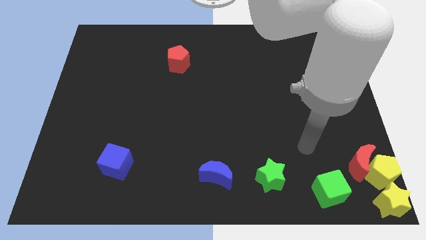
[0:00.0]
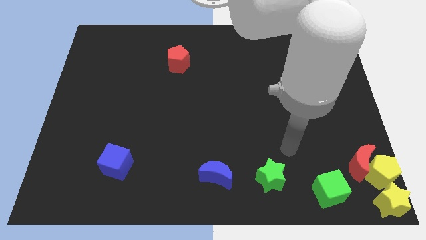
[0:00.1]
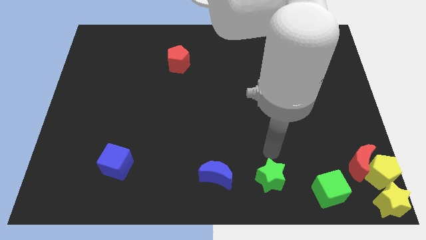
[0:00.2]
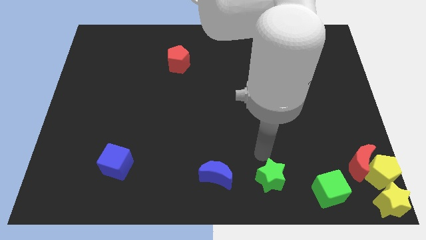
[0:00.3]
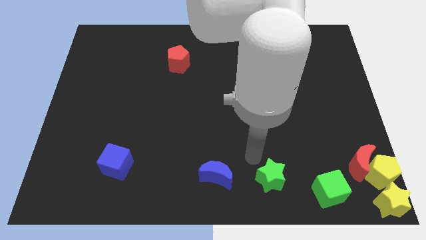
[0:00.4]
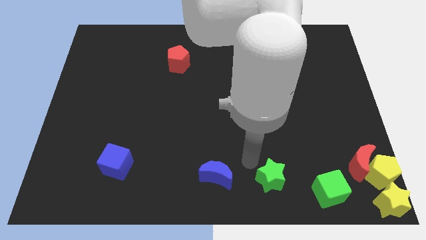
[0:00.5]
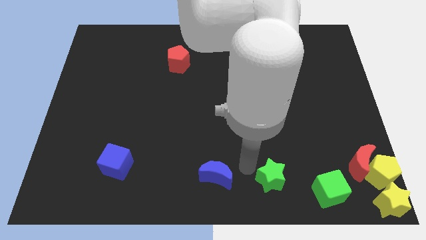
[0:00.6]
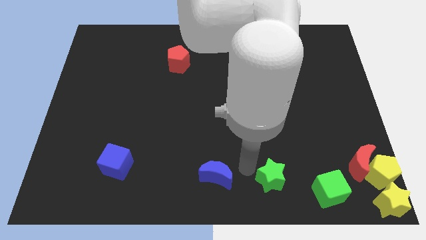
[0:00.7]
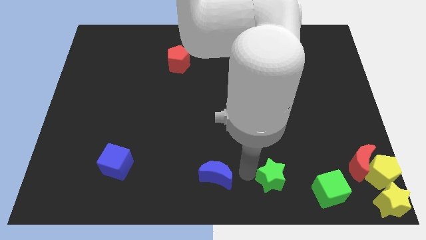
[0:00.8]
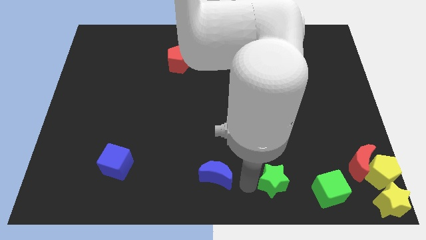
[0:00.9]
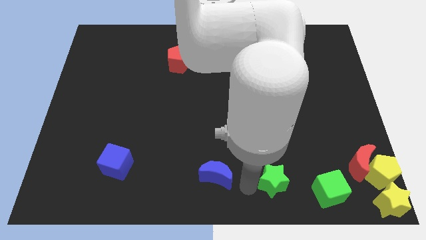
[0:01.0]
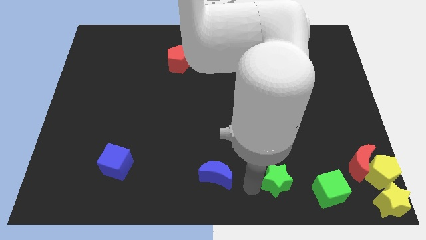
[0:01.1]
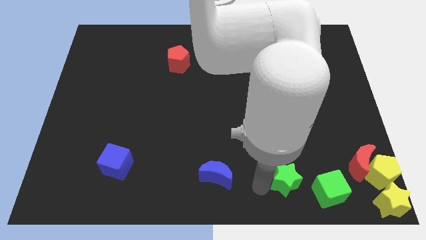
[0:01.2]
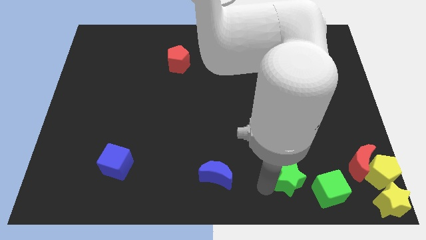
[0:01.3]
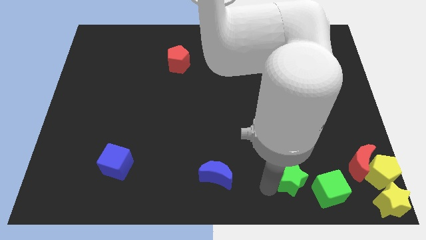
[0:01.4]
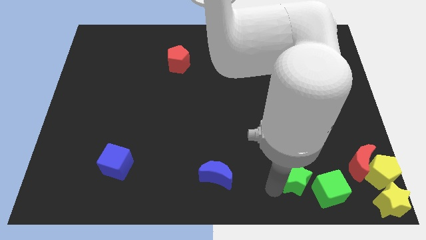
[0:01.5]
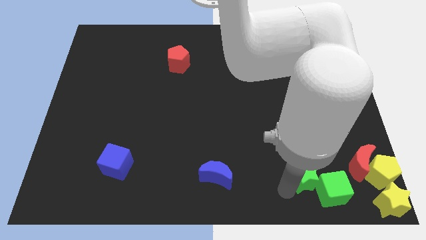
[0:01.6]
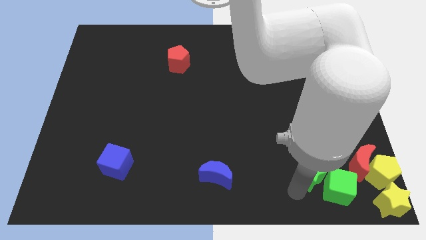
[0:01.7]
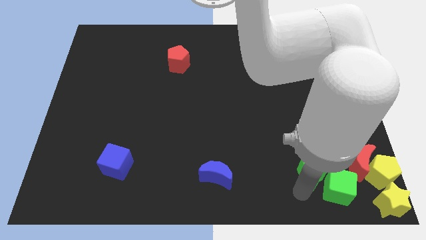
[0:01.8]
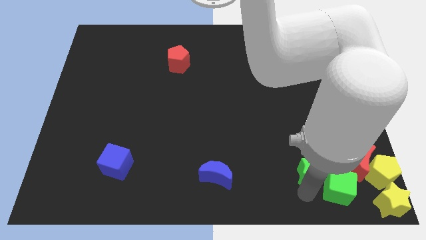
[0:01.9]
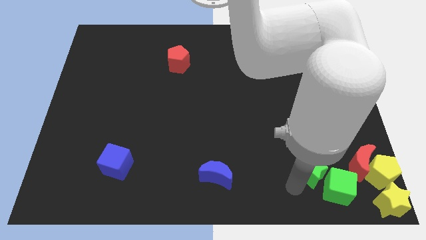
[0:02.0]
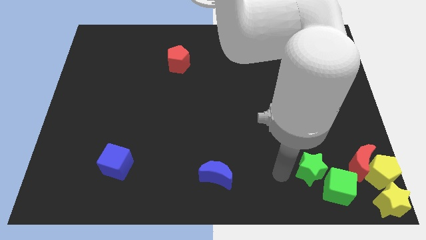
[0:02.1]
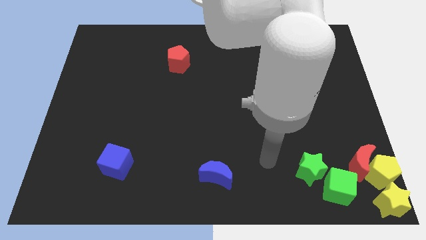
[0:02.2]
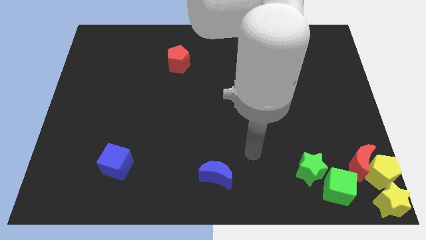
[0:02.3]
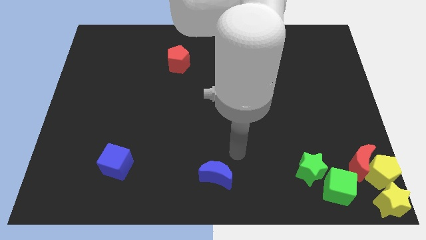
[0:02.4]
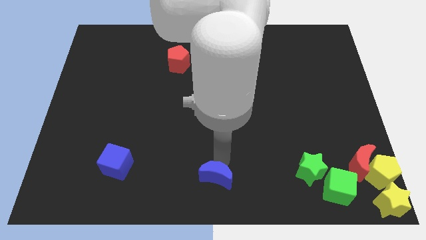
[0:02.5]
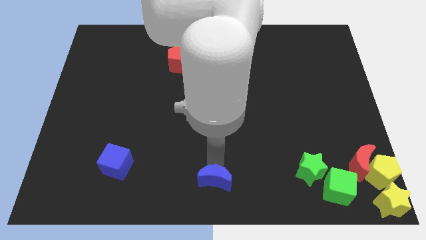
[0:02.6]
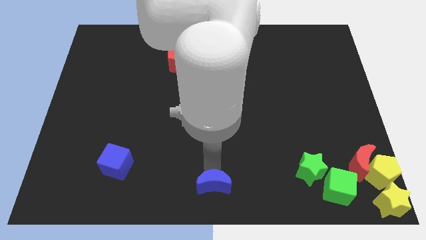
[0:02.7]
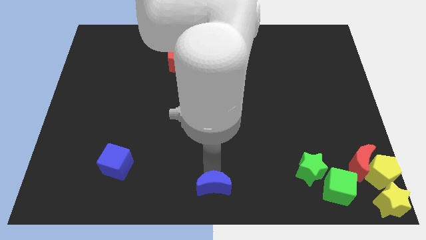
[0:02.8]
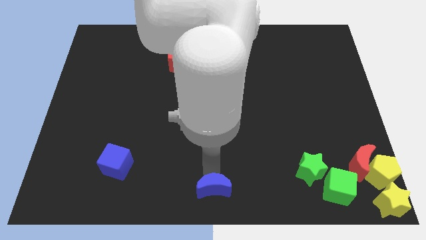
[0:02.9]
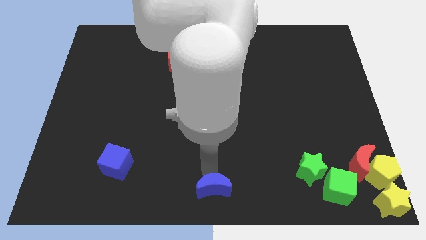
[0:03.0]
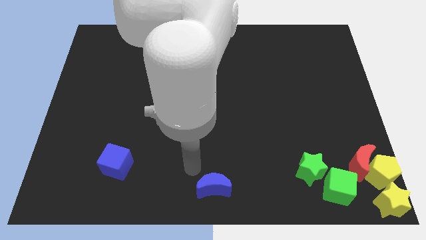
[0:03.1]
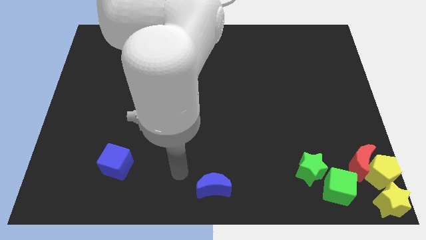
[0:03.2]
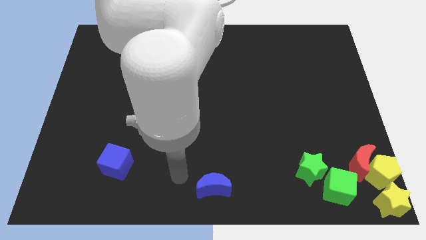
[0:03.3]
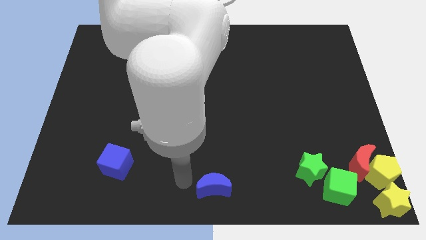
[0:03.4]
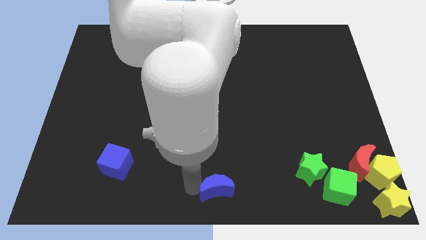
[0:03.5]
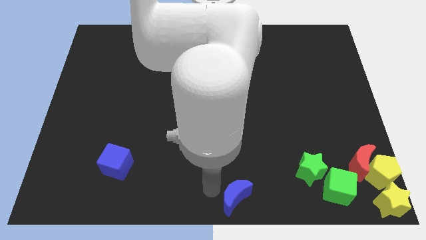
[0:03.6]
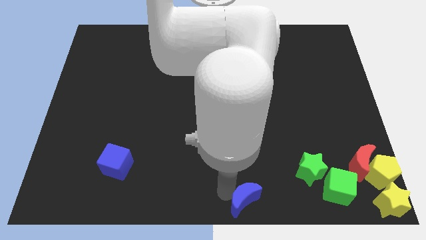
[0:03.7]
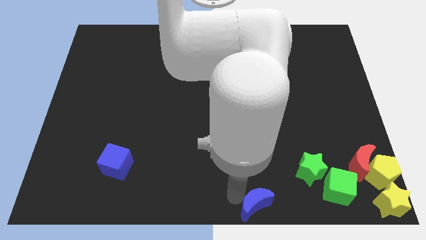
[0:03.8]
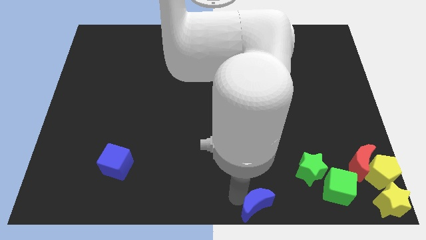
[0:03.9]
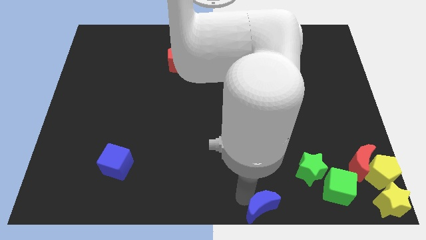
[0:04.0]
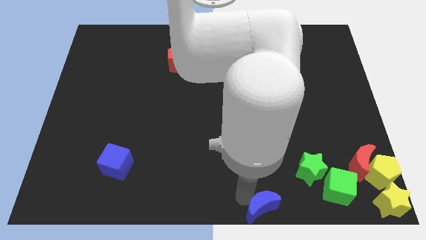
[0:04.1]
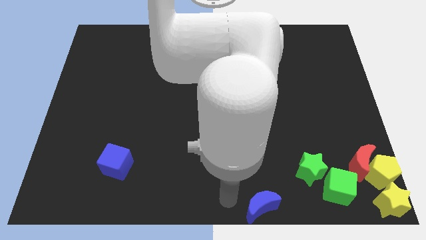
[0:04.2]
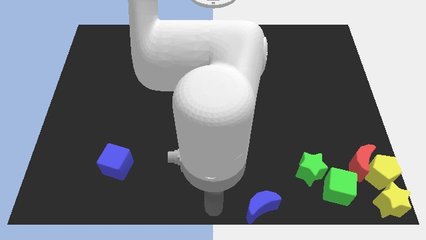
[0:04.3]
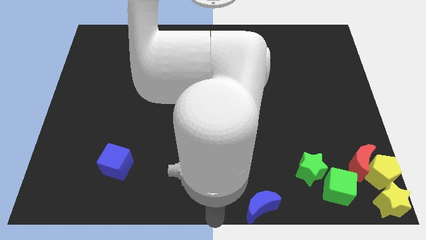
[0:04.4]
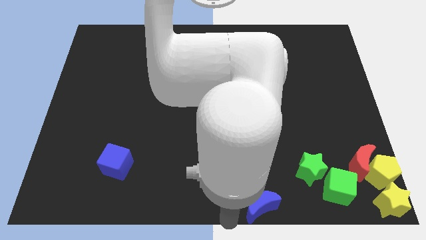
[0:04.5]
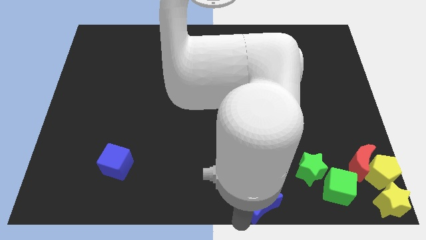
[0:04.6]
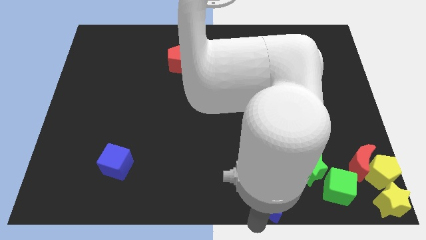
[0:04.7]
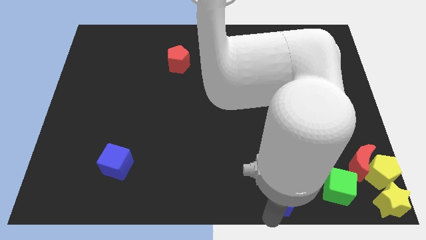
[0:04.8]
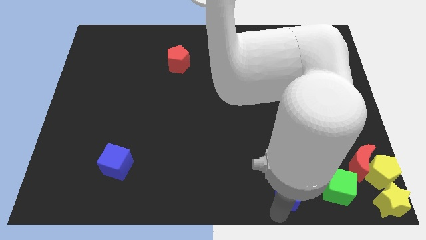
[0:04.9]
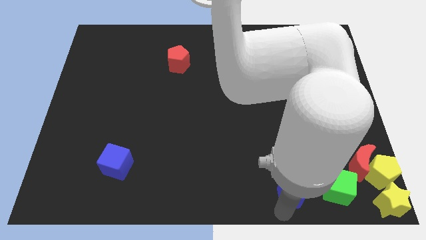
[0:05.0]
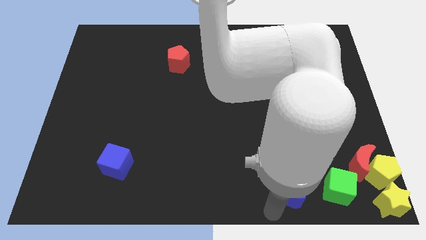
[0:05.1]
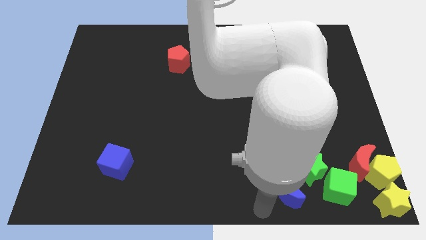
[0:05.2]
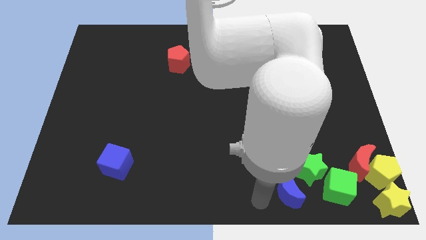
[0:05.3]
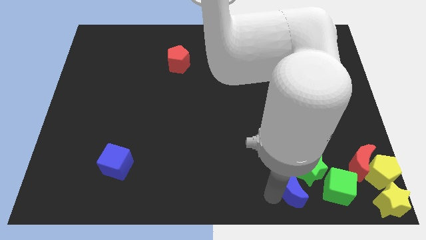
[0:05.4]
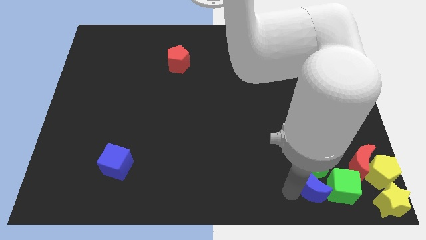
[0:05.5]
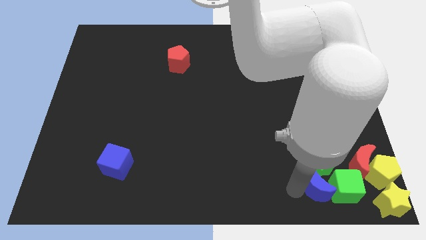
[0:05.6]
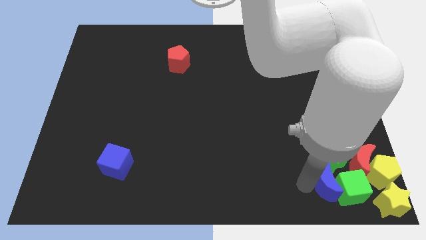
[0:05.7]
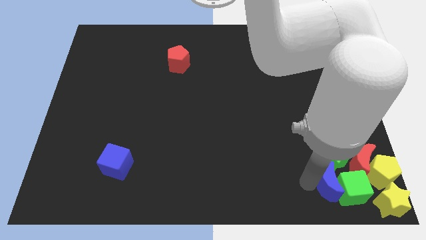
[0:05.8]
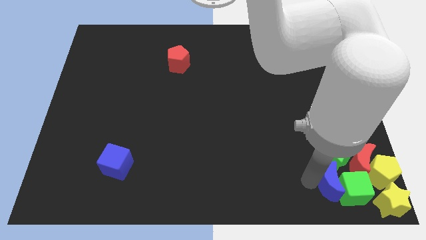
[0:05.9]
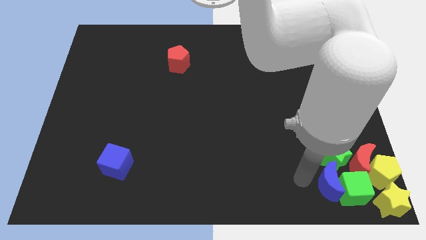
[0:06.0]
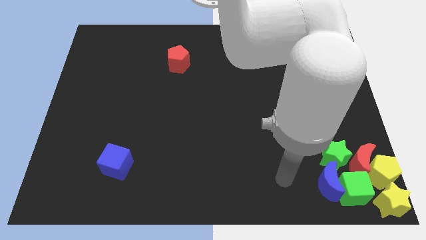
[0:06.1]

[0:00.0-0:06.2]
group up the green blocks blue moon red moon and yellow blocks at the bottom right of the table

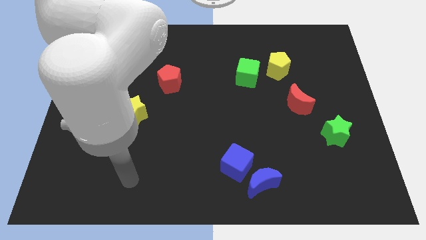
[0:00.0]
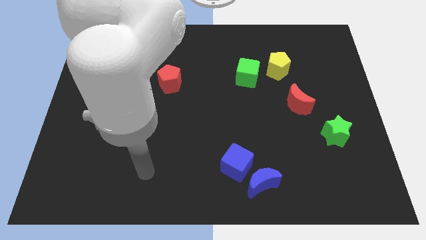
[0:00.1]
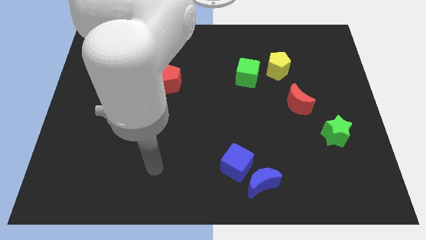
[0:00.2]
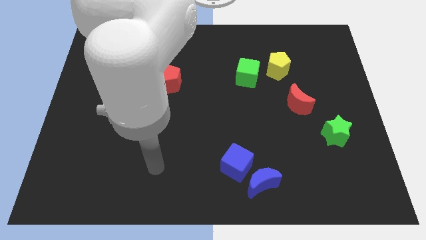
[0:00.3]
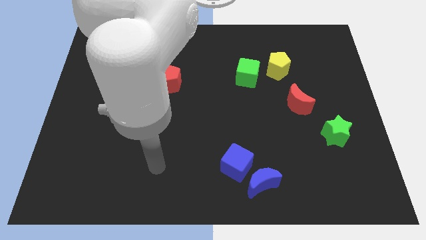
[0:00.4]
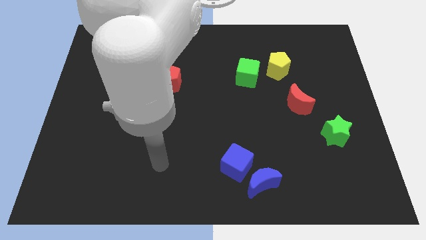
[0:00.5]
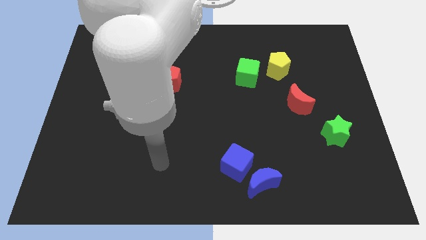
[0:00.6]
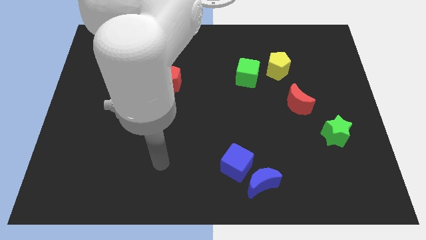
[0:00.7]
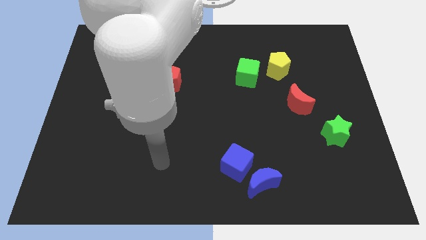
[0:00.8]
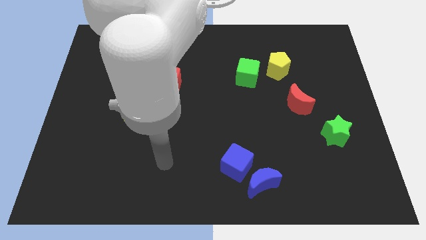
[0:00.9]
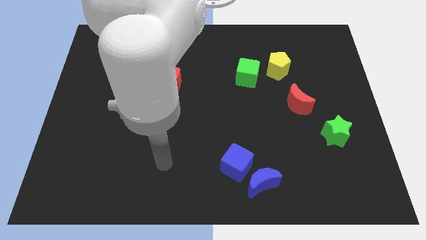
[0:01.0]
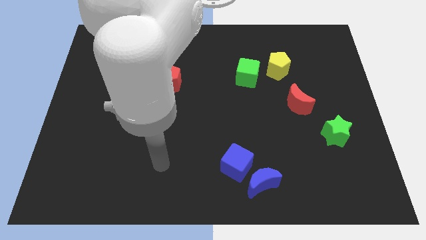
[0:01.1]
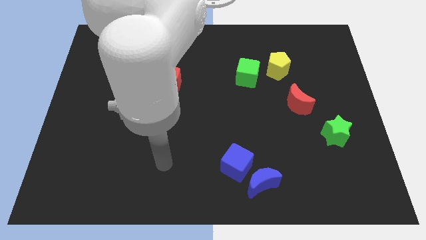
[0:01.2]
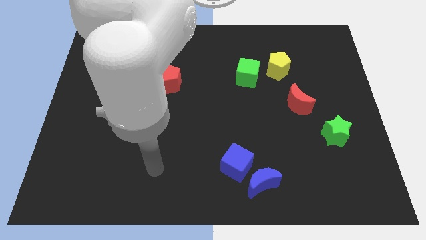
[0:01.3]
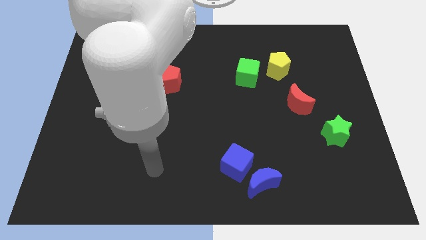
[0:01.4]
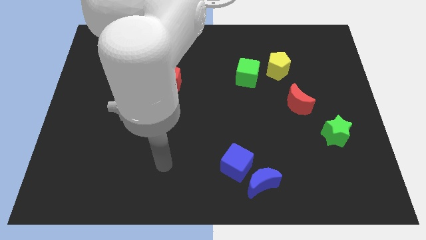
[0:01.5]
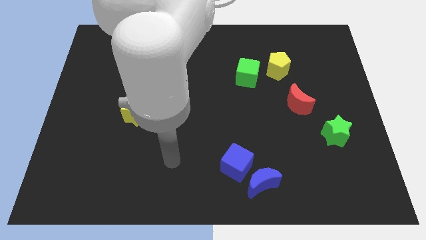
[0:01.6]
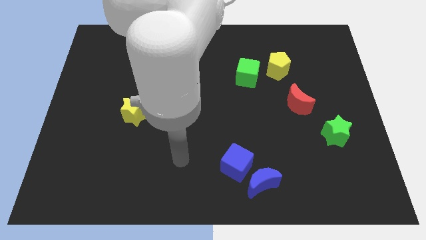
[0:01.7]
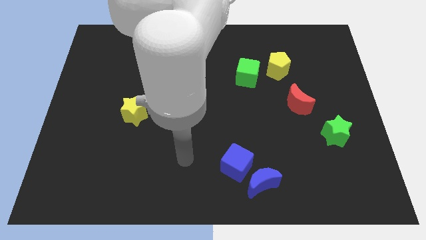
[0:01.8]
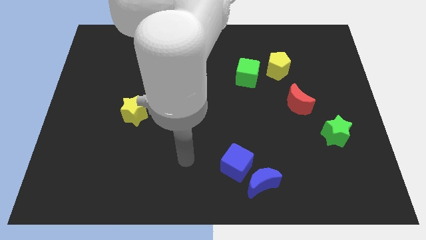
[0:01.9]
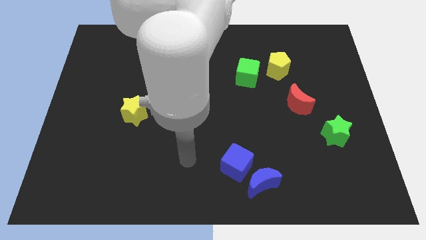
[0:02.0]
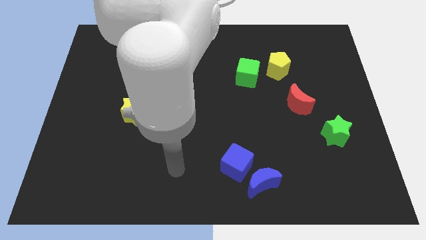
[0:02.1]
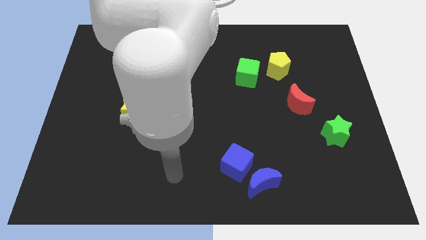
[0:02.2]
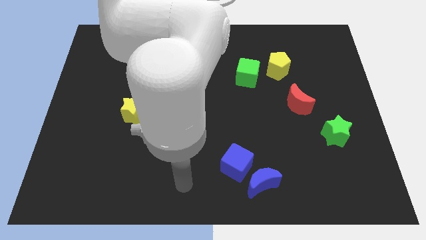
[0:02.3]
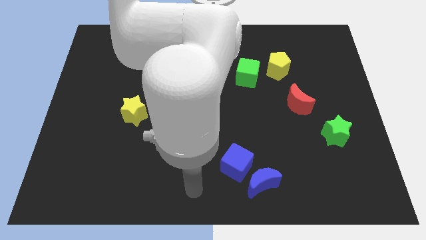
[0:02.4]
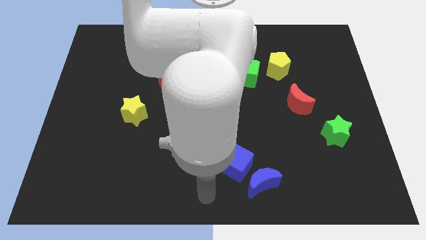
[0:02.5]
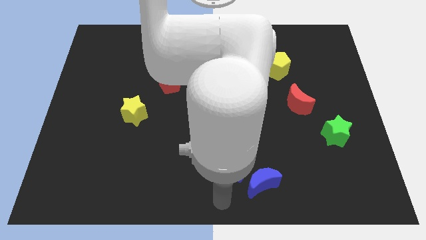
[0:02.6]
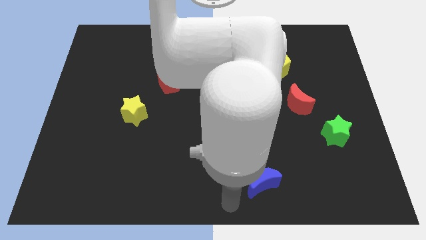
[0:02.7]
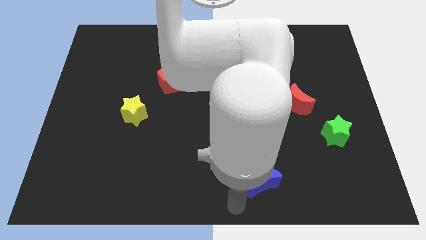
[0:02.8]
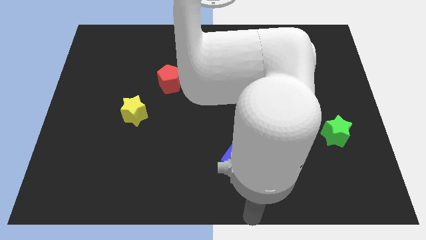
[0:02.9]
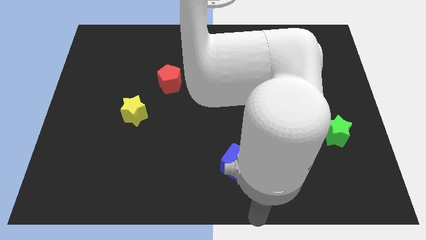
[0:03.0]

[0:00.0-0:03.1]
slide your arm below the blue moon
